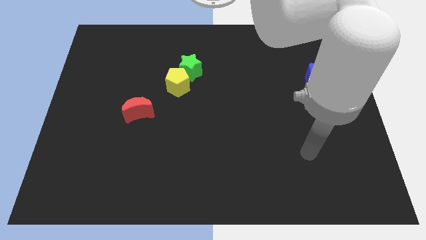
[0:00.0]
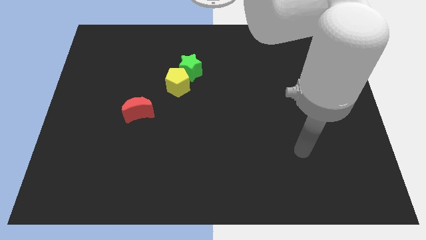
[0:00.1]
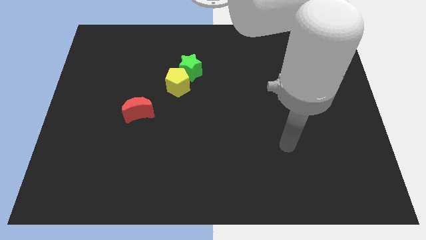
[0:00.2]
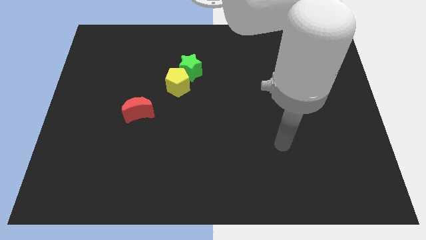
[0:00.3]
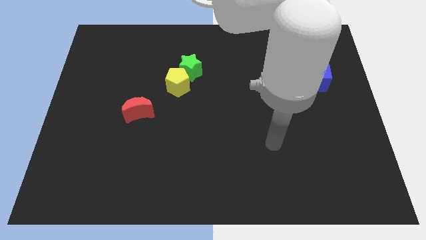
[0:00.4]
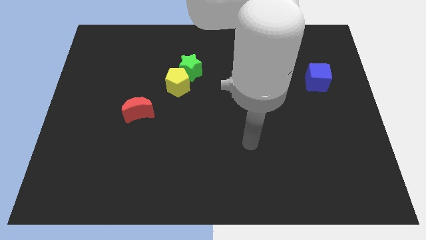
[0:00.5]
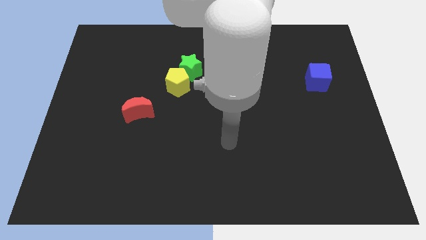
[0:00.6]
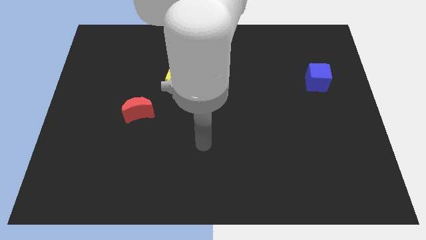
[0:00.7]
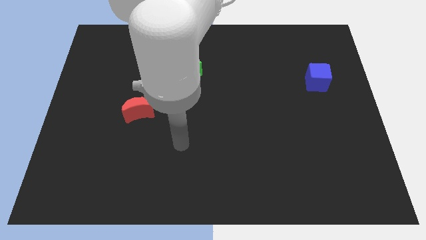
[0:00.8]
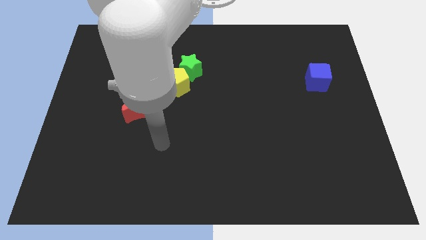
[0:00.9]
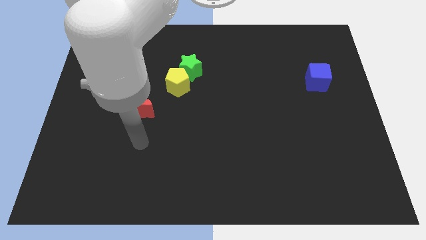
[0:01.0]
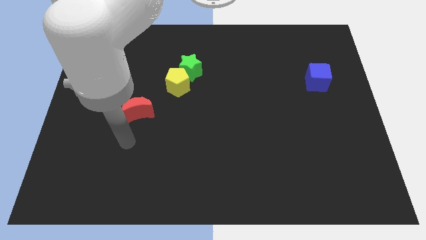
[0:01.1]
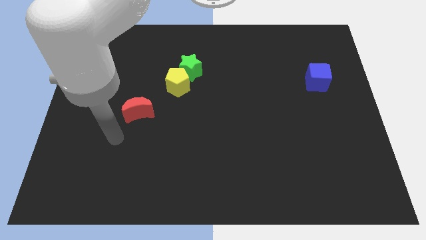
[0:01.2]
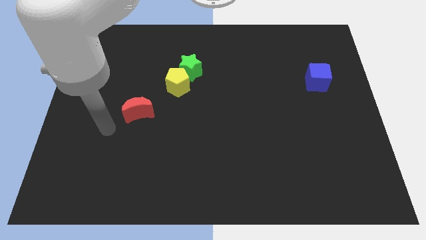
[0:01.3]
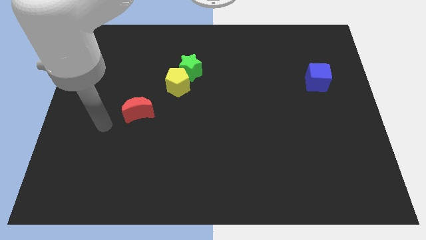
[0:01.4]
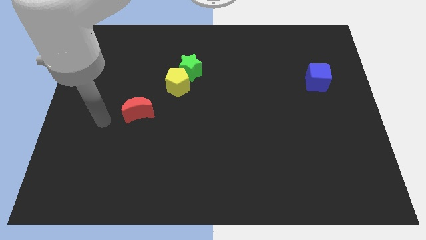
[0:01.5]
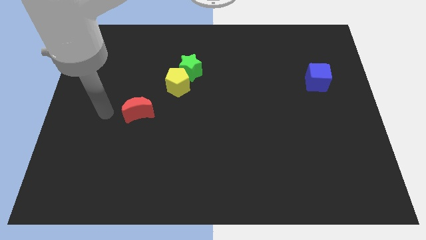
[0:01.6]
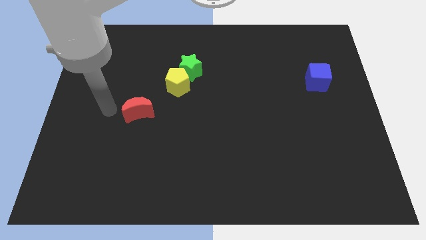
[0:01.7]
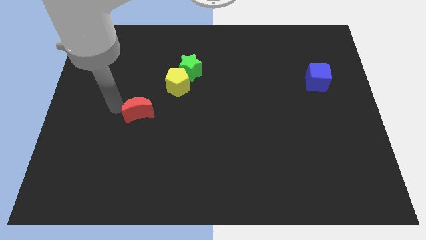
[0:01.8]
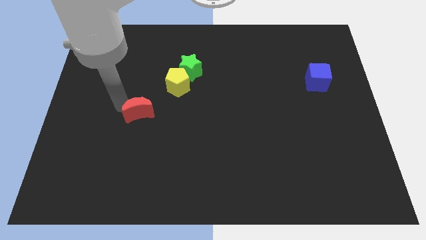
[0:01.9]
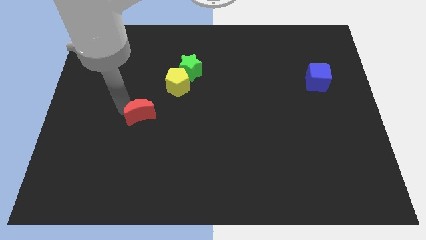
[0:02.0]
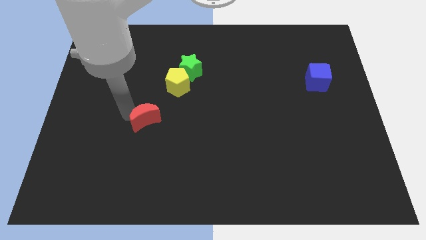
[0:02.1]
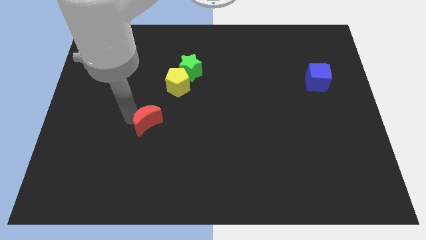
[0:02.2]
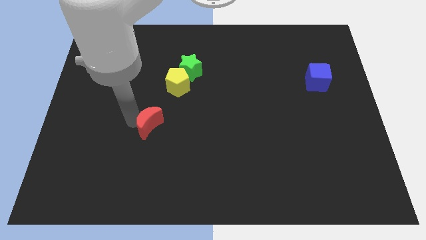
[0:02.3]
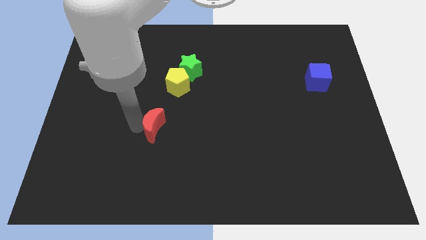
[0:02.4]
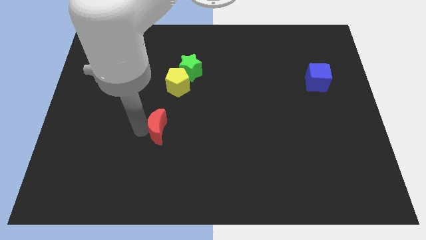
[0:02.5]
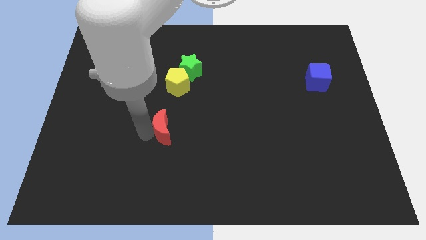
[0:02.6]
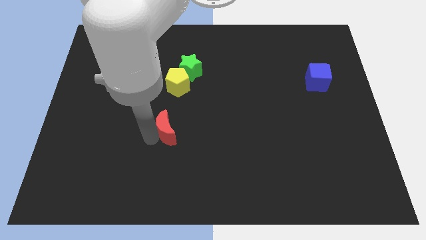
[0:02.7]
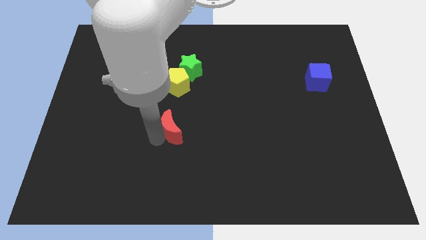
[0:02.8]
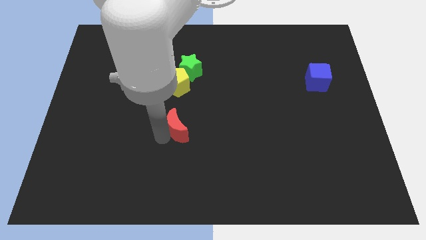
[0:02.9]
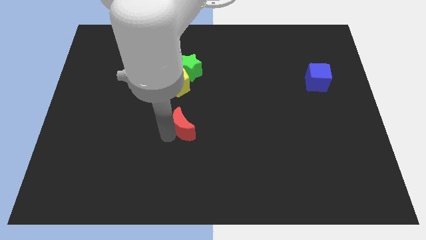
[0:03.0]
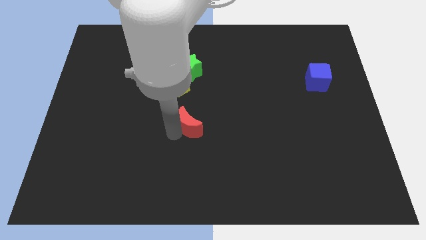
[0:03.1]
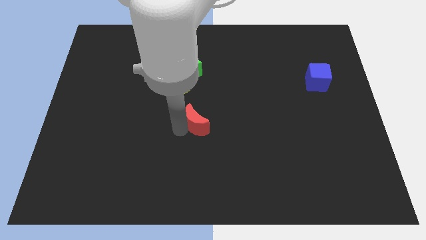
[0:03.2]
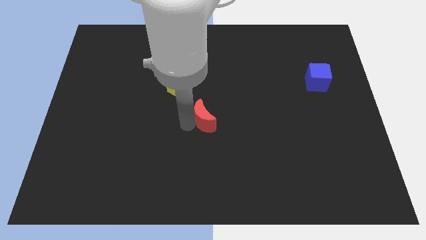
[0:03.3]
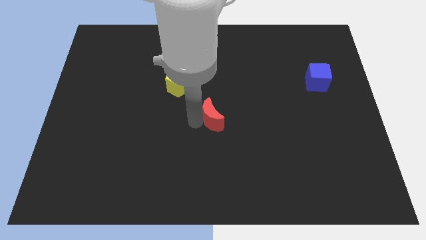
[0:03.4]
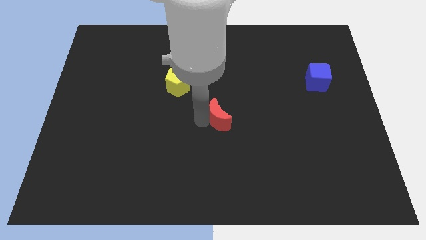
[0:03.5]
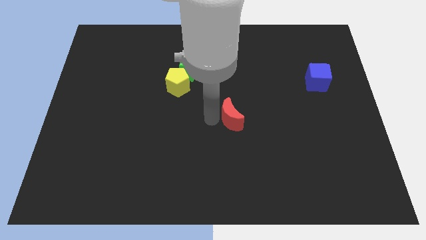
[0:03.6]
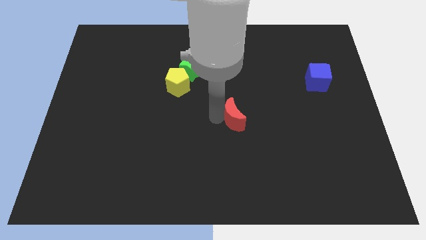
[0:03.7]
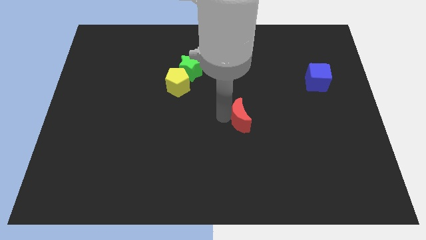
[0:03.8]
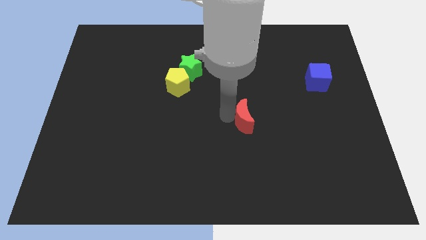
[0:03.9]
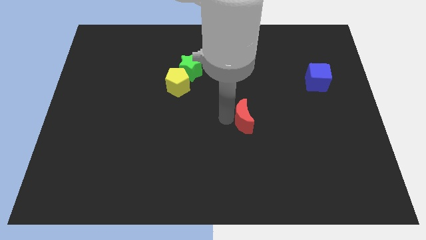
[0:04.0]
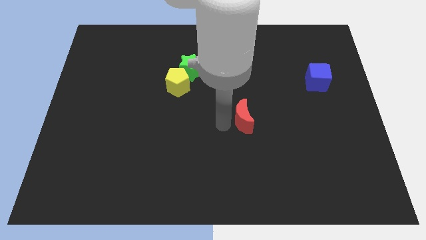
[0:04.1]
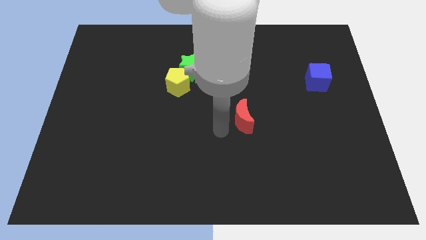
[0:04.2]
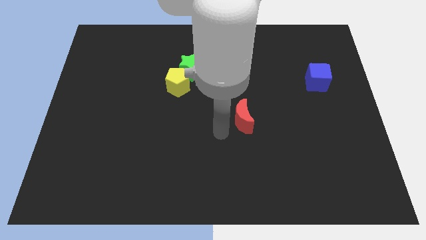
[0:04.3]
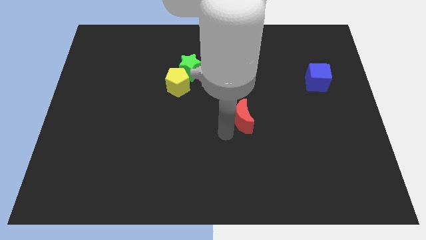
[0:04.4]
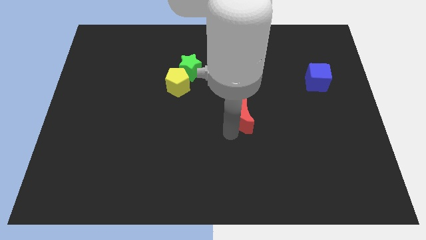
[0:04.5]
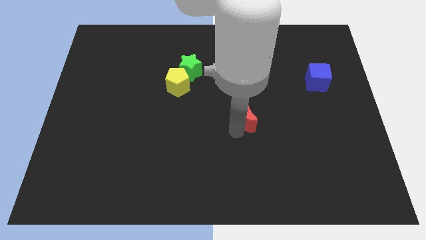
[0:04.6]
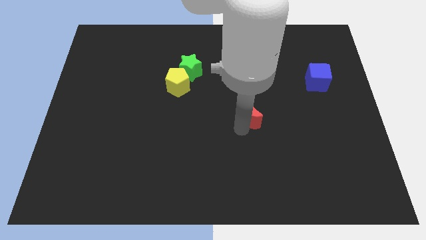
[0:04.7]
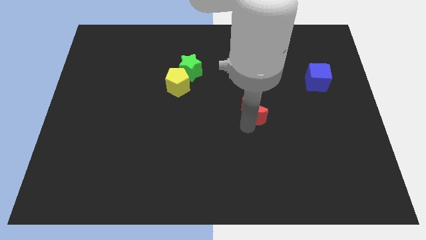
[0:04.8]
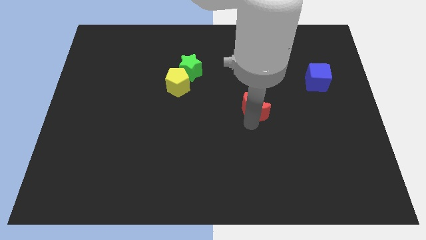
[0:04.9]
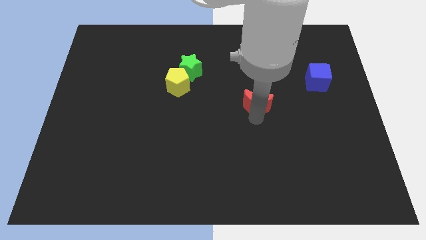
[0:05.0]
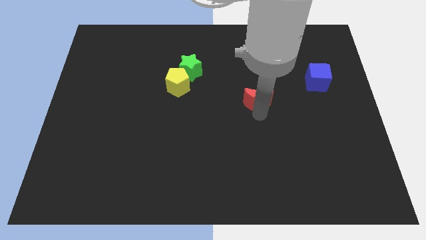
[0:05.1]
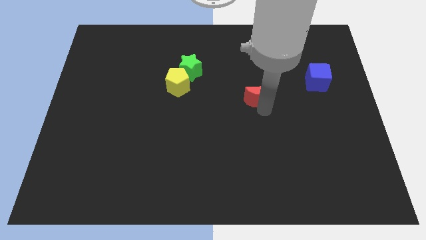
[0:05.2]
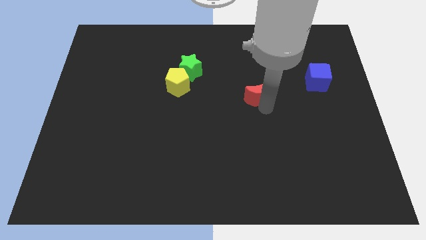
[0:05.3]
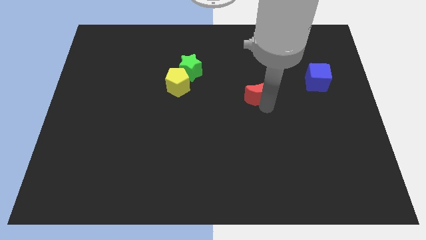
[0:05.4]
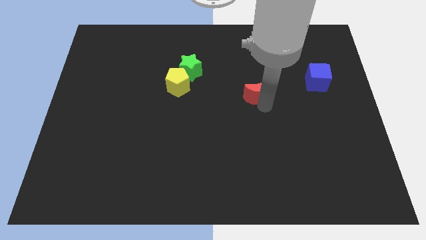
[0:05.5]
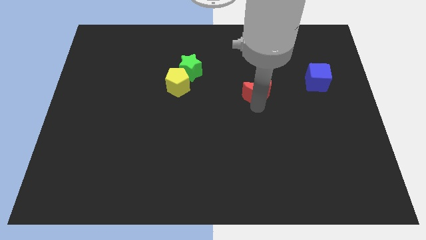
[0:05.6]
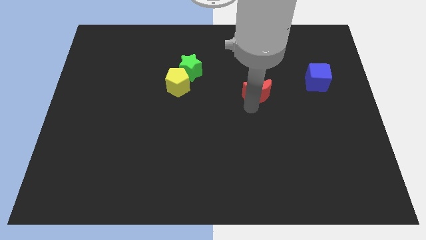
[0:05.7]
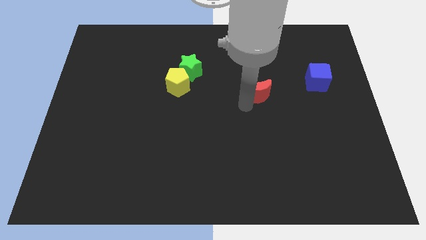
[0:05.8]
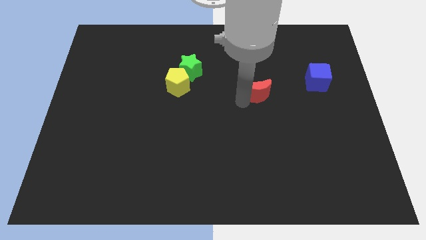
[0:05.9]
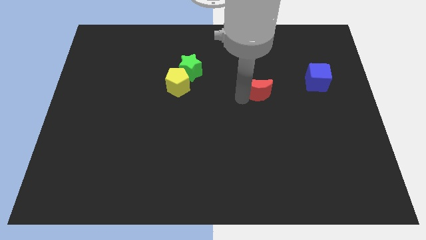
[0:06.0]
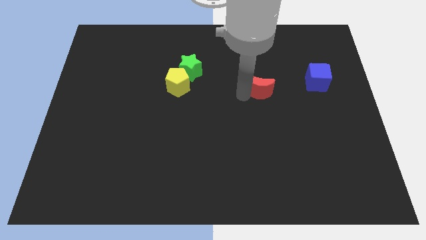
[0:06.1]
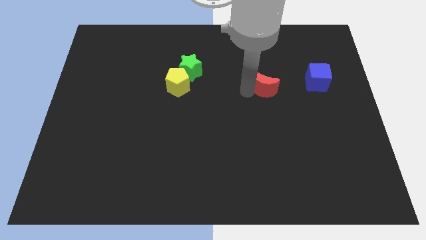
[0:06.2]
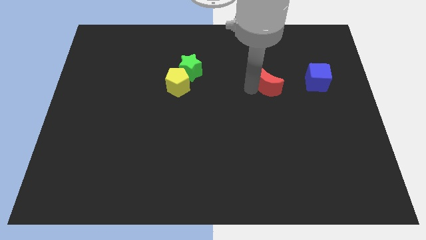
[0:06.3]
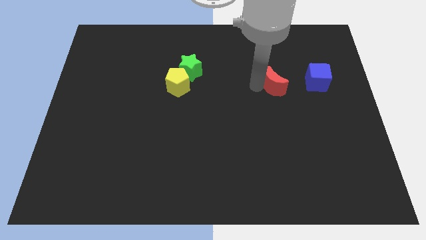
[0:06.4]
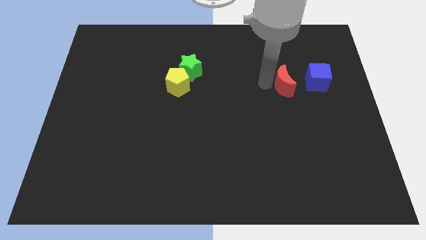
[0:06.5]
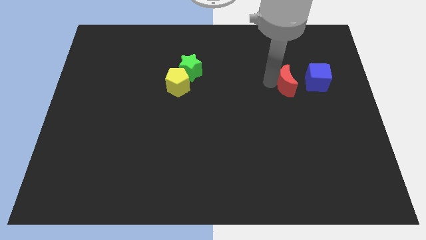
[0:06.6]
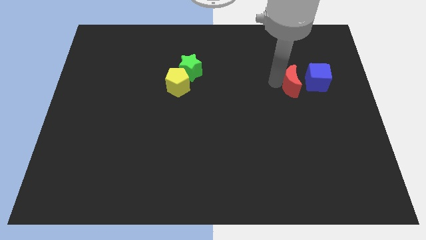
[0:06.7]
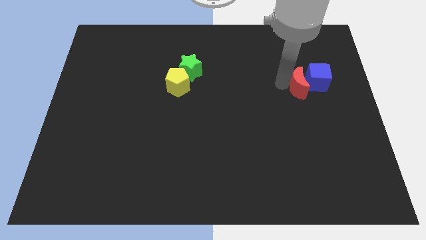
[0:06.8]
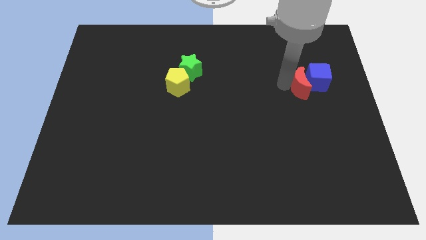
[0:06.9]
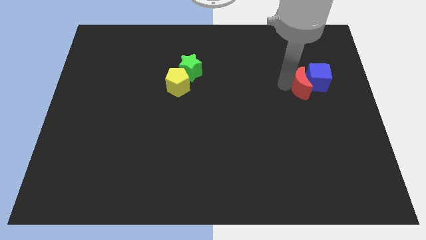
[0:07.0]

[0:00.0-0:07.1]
slide the red block to the blue block

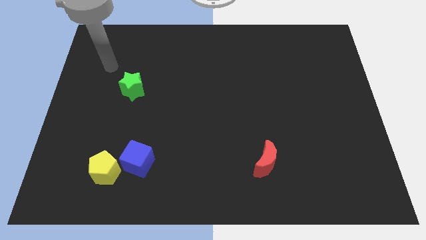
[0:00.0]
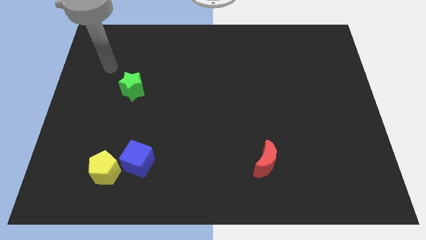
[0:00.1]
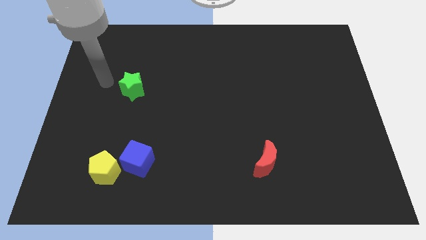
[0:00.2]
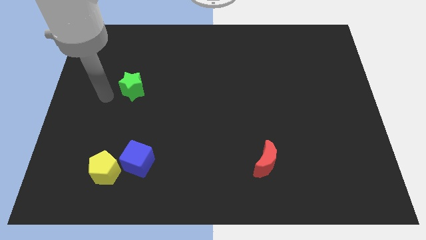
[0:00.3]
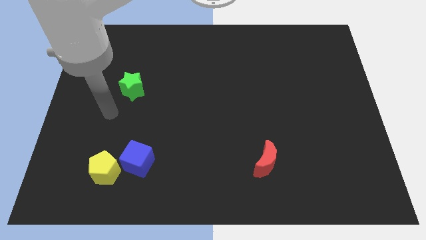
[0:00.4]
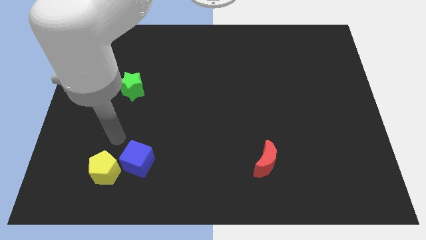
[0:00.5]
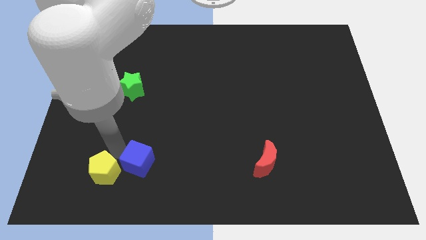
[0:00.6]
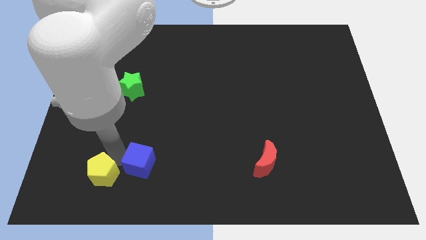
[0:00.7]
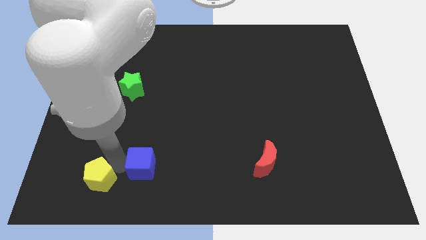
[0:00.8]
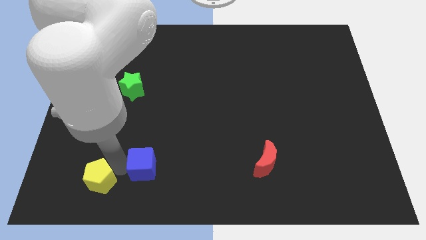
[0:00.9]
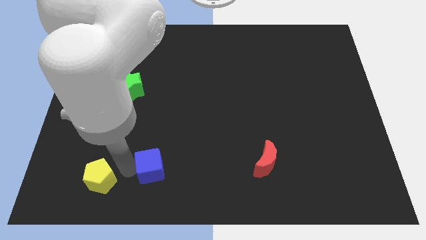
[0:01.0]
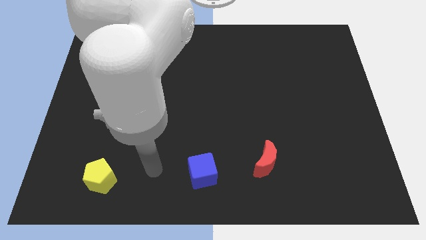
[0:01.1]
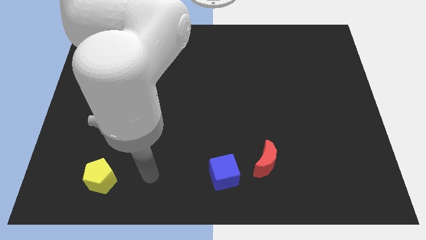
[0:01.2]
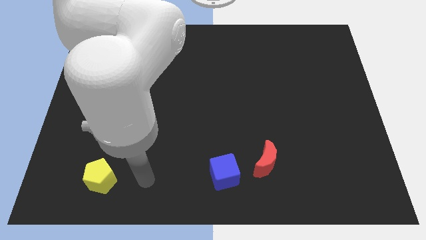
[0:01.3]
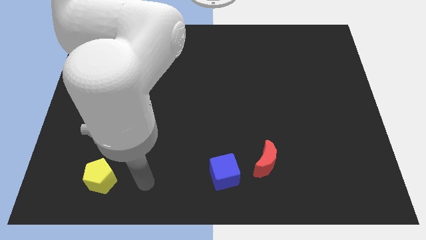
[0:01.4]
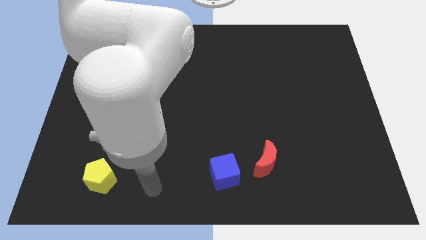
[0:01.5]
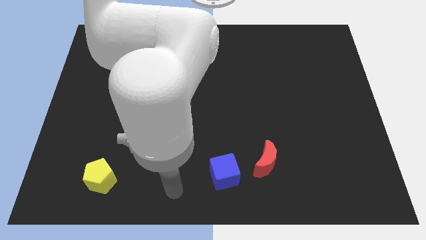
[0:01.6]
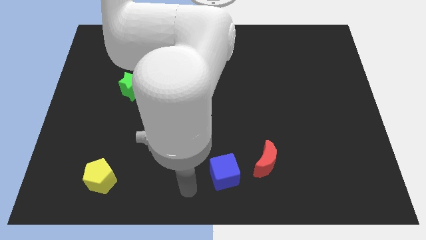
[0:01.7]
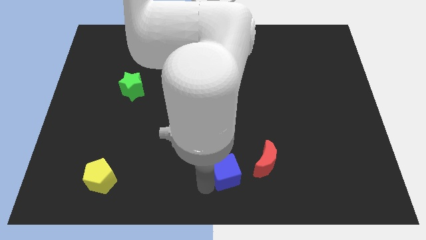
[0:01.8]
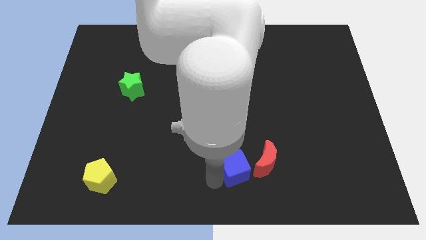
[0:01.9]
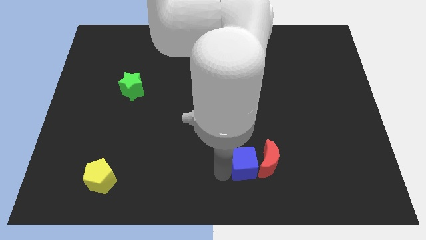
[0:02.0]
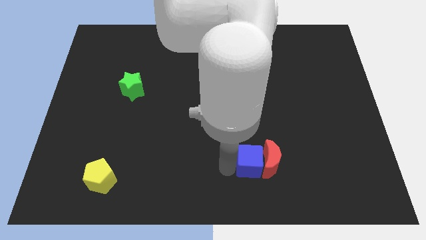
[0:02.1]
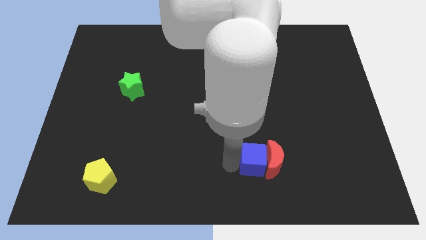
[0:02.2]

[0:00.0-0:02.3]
push the blue block to the red block
